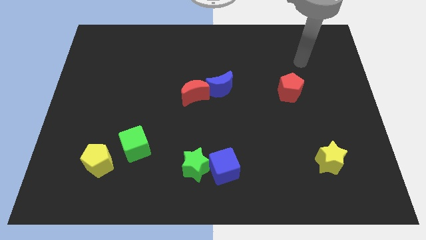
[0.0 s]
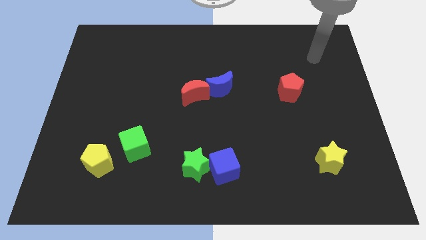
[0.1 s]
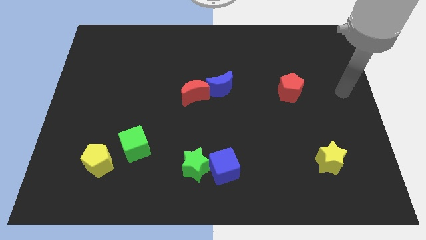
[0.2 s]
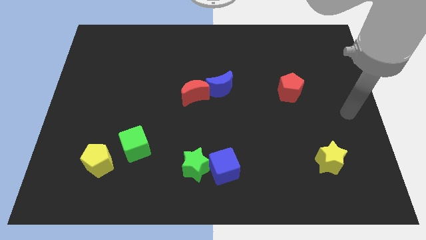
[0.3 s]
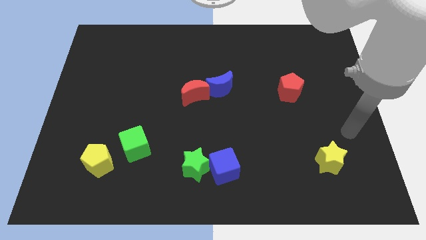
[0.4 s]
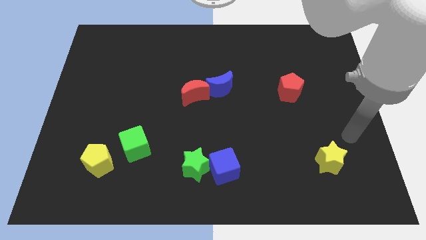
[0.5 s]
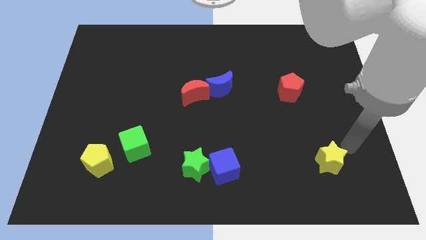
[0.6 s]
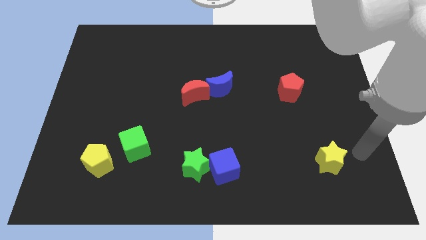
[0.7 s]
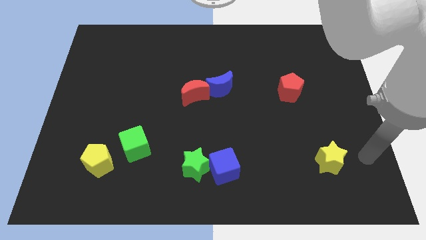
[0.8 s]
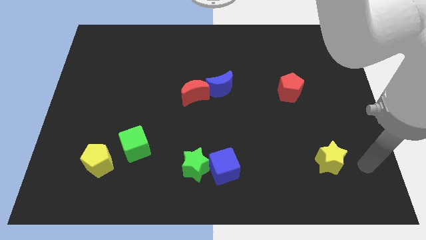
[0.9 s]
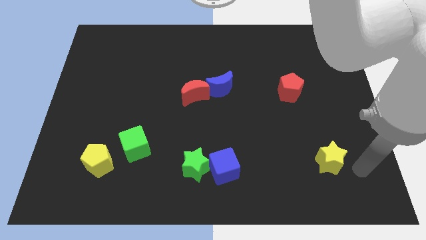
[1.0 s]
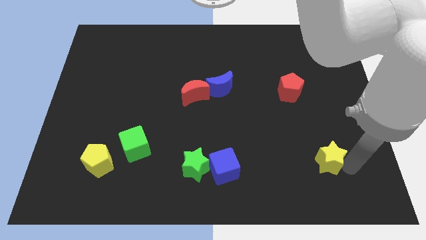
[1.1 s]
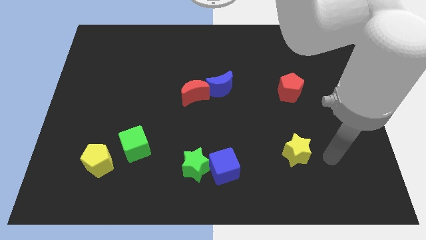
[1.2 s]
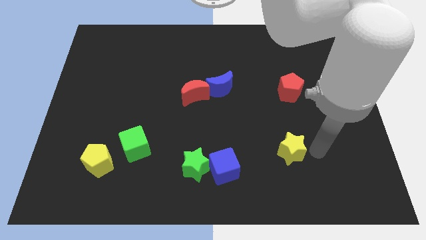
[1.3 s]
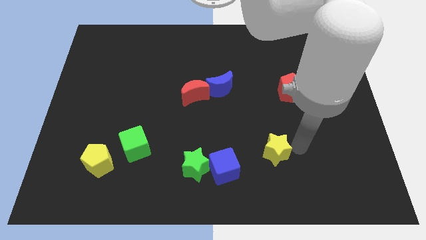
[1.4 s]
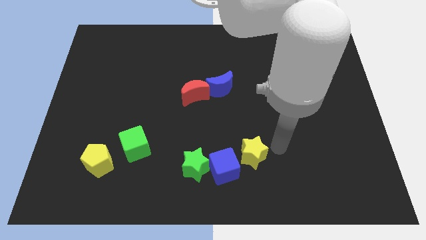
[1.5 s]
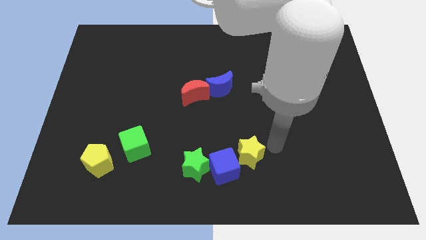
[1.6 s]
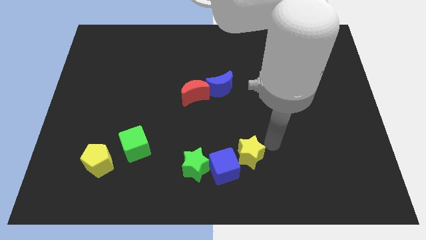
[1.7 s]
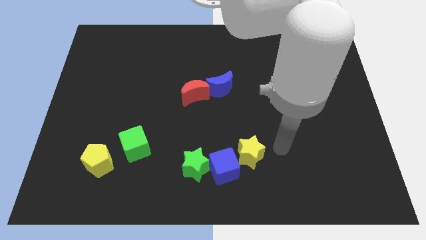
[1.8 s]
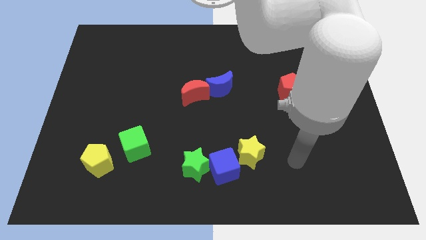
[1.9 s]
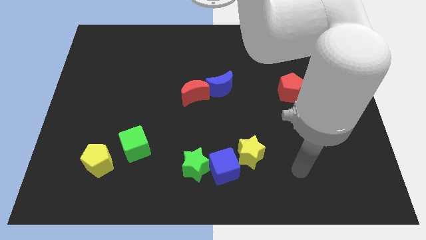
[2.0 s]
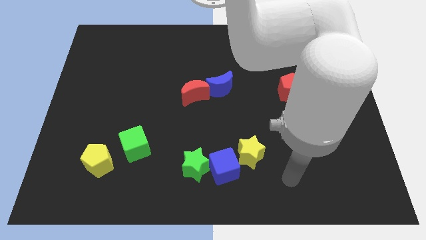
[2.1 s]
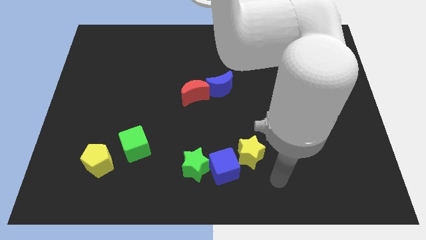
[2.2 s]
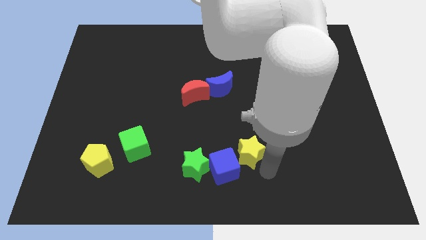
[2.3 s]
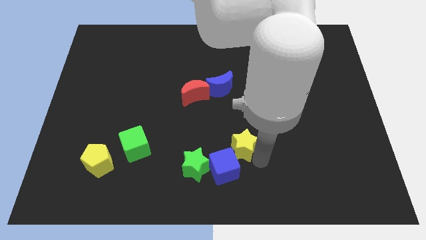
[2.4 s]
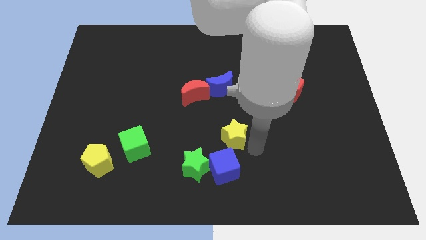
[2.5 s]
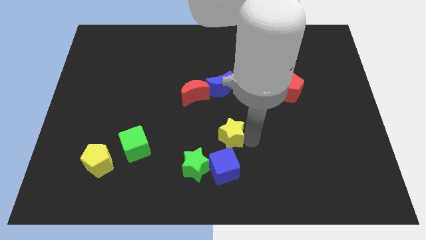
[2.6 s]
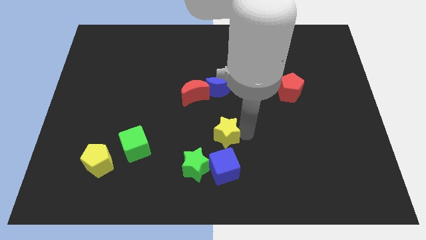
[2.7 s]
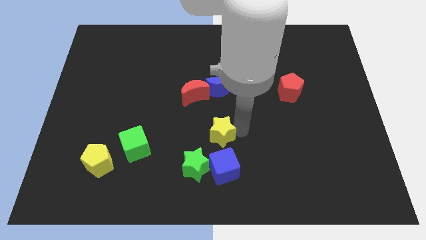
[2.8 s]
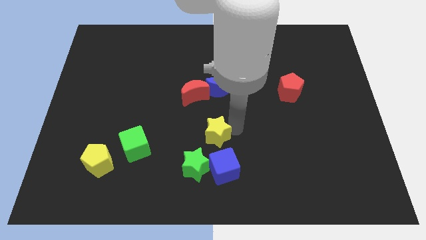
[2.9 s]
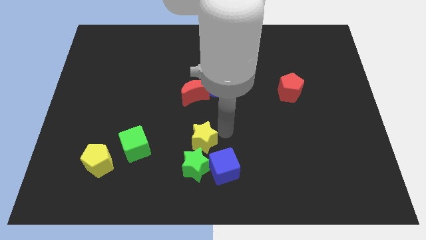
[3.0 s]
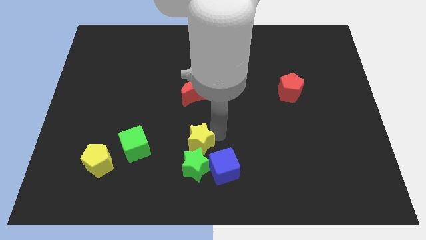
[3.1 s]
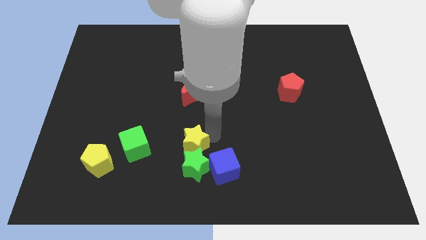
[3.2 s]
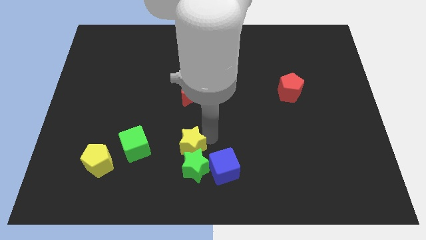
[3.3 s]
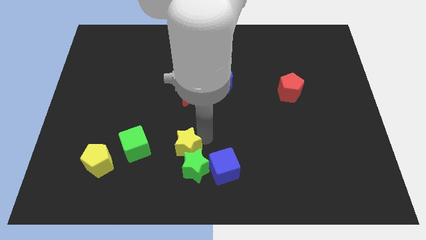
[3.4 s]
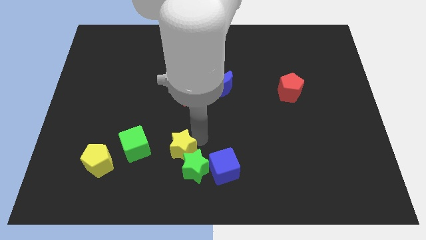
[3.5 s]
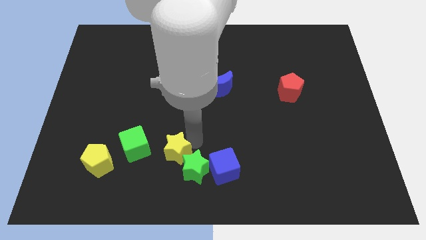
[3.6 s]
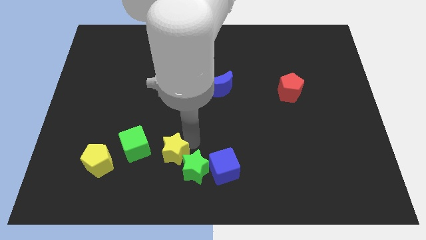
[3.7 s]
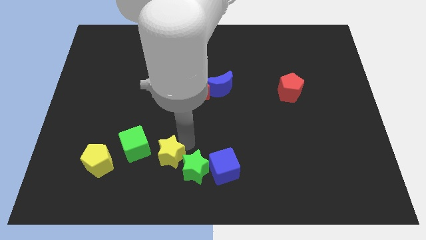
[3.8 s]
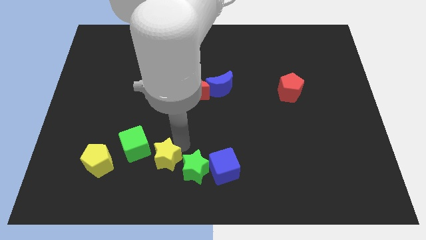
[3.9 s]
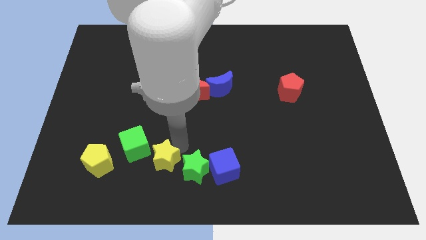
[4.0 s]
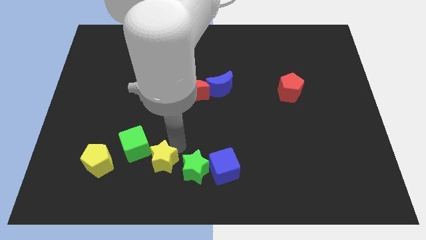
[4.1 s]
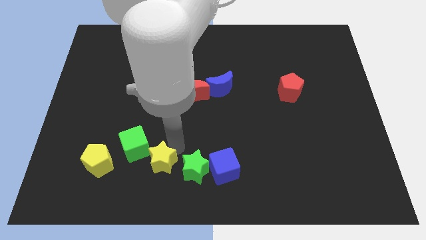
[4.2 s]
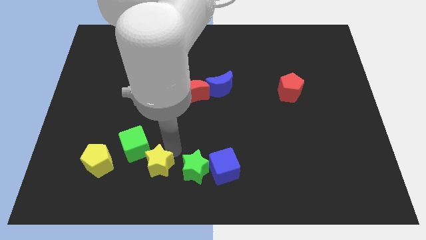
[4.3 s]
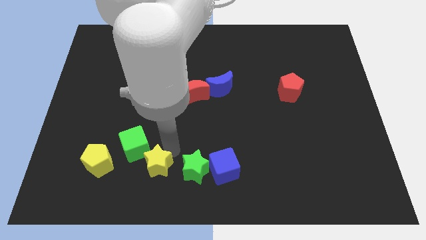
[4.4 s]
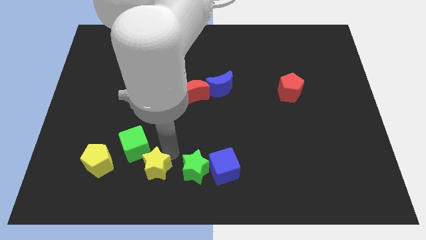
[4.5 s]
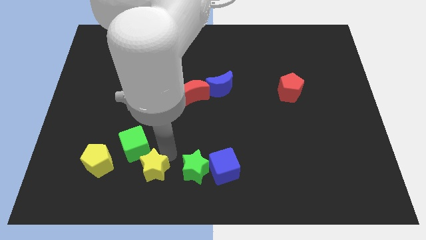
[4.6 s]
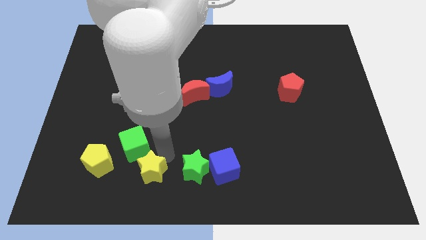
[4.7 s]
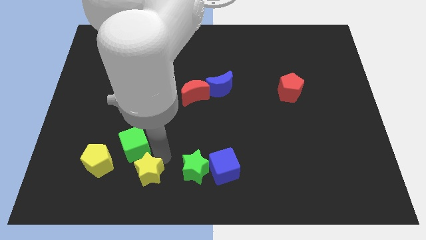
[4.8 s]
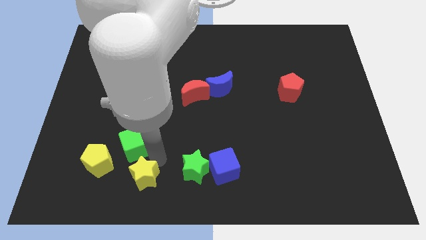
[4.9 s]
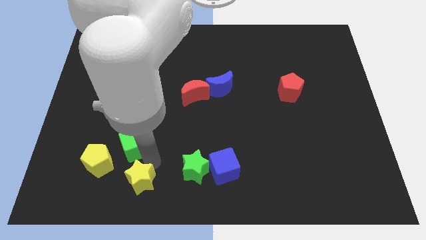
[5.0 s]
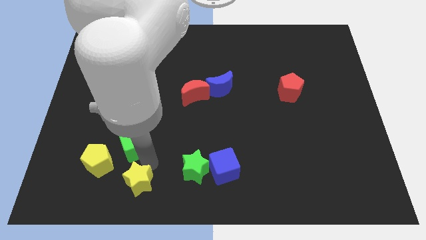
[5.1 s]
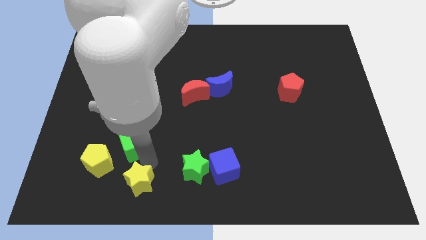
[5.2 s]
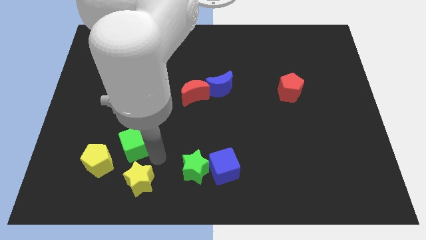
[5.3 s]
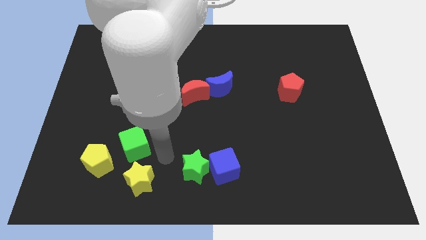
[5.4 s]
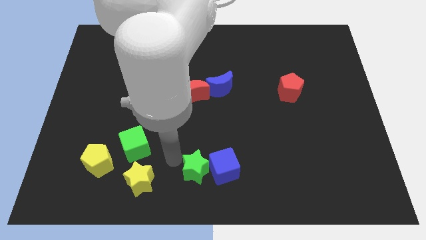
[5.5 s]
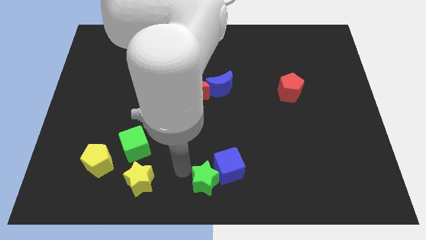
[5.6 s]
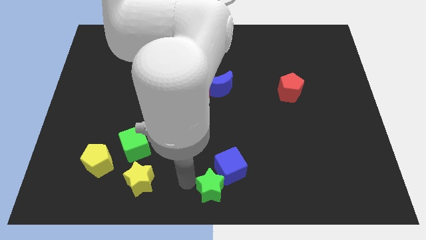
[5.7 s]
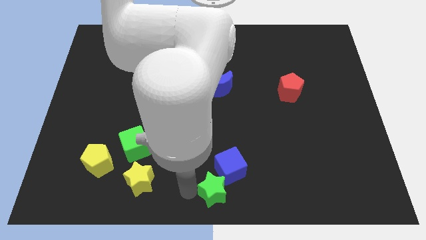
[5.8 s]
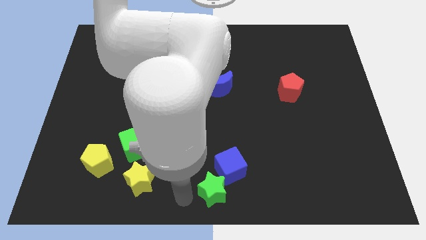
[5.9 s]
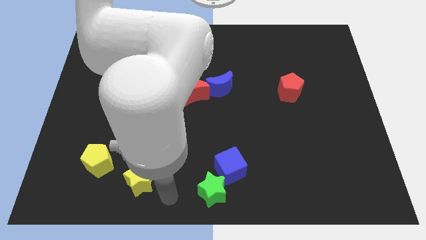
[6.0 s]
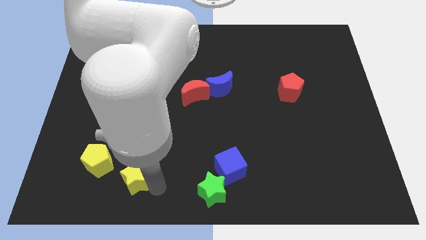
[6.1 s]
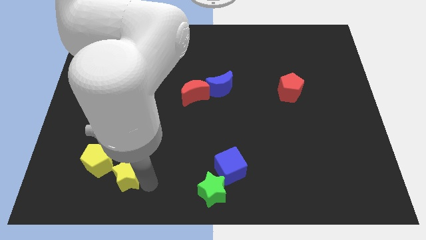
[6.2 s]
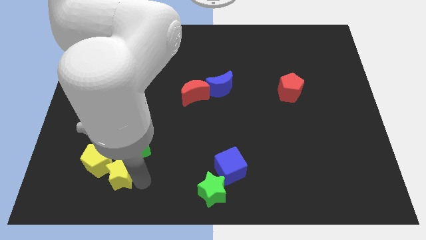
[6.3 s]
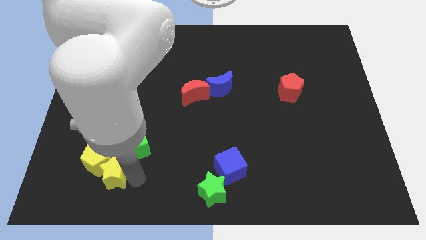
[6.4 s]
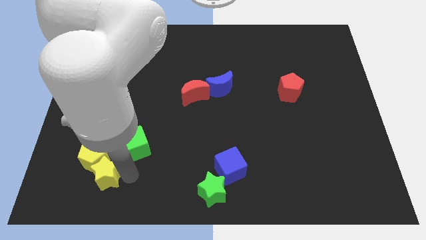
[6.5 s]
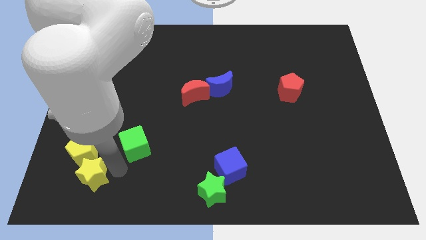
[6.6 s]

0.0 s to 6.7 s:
push the yellow star to the yellow pentagon

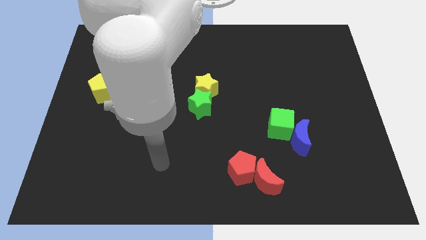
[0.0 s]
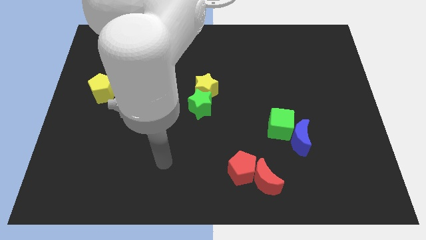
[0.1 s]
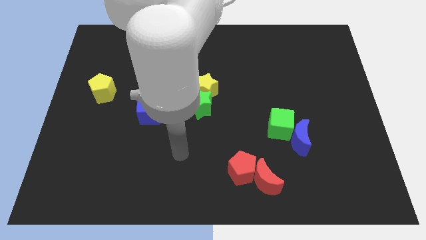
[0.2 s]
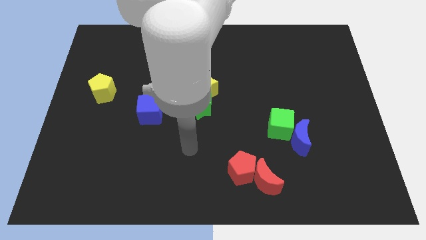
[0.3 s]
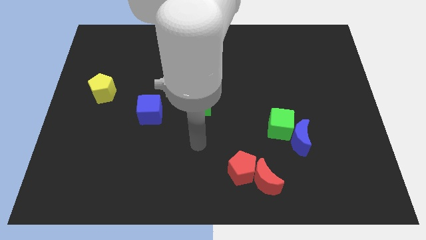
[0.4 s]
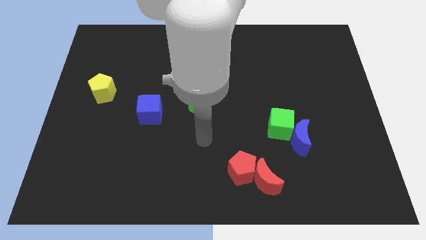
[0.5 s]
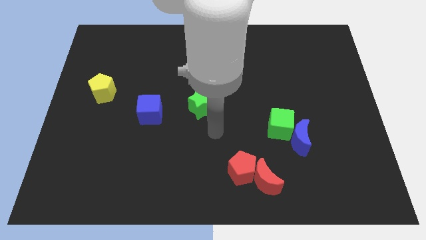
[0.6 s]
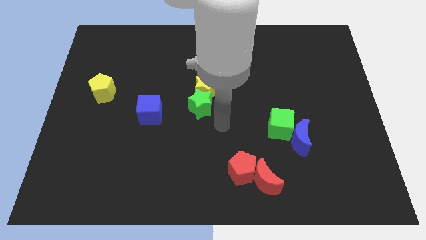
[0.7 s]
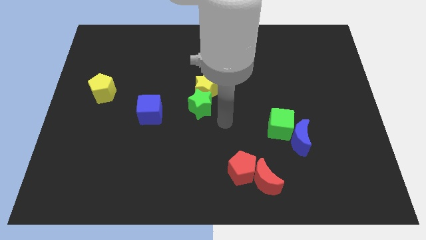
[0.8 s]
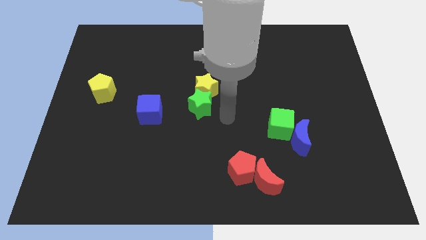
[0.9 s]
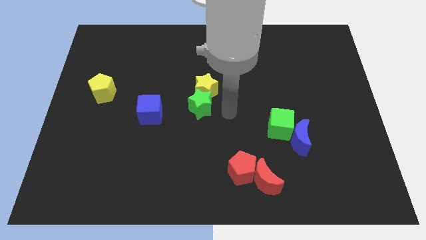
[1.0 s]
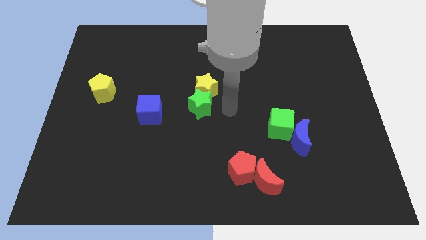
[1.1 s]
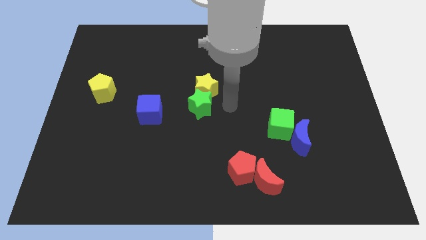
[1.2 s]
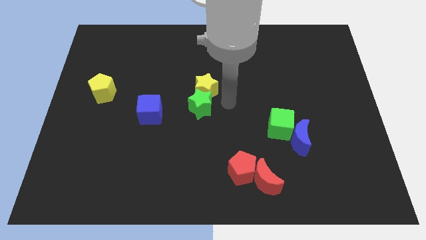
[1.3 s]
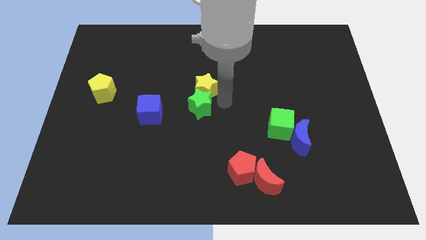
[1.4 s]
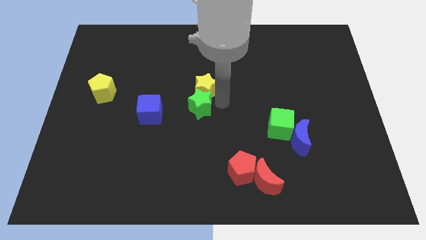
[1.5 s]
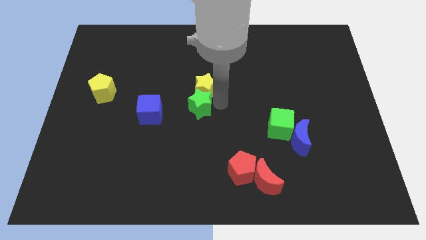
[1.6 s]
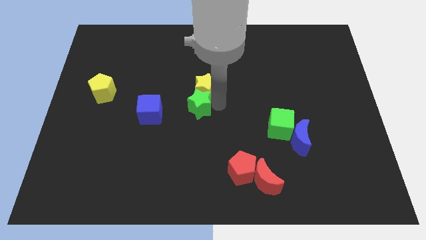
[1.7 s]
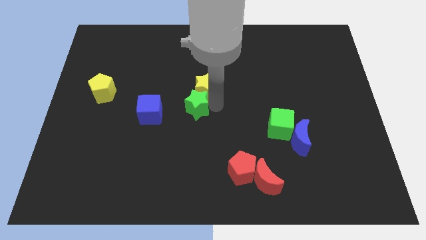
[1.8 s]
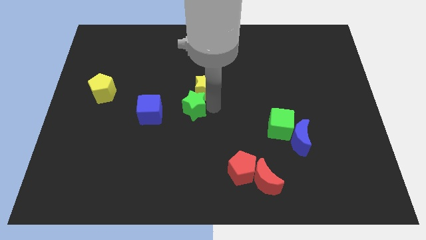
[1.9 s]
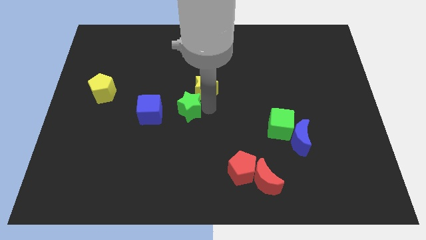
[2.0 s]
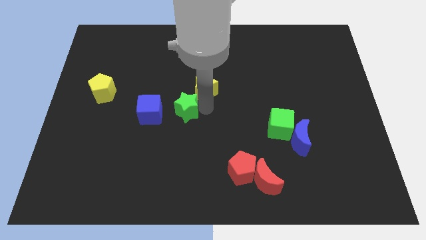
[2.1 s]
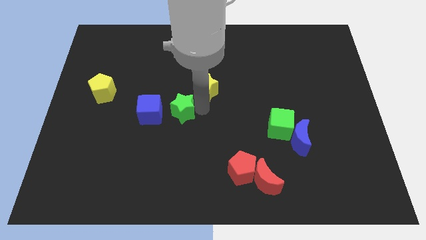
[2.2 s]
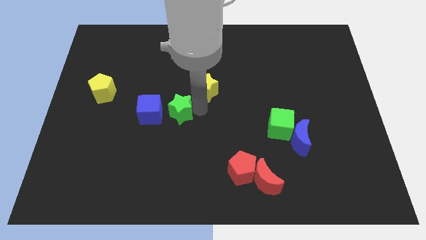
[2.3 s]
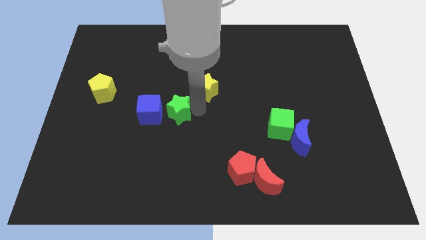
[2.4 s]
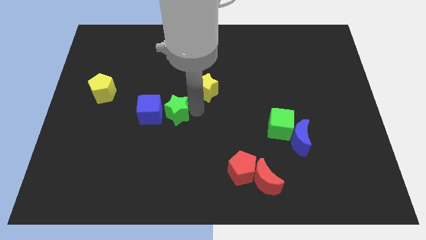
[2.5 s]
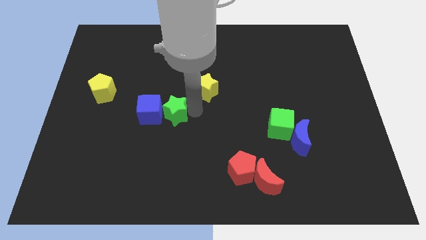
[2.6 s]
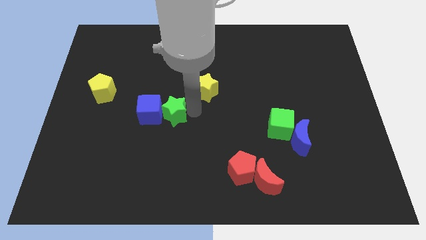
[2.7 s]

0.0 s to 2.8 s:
put the green star close to the blue cube
